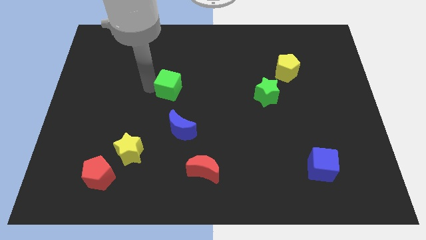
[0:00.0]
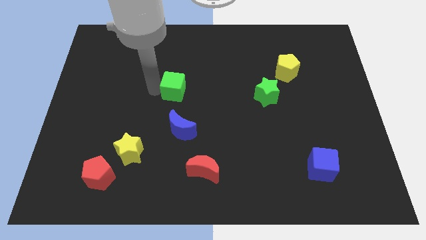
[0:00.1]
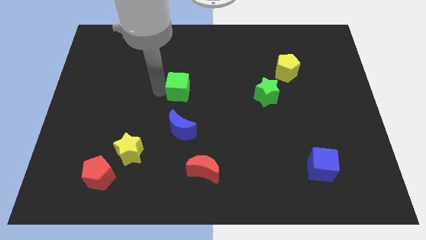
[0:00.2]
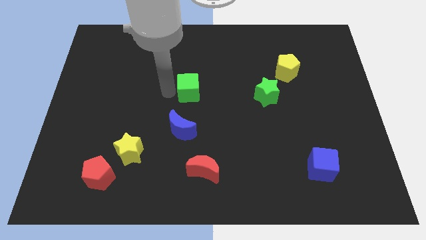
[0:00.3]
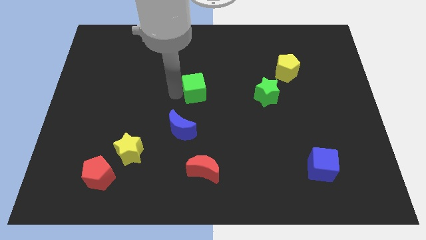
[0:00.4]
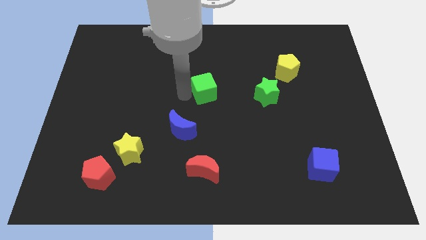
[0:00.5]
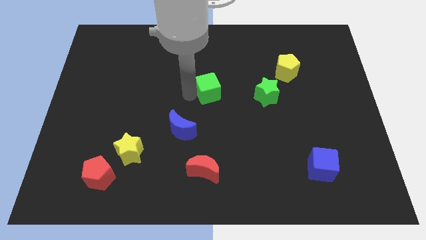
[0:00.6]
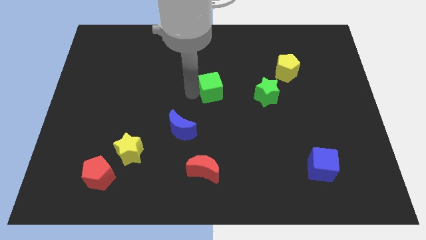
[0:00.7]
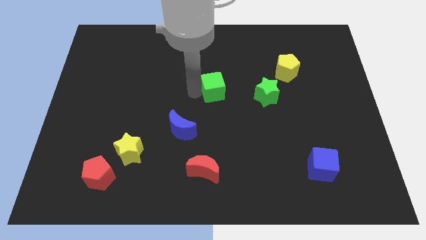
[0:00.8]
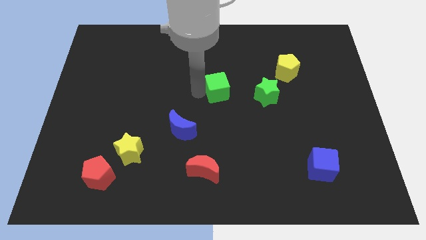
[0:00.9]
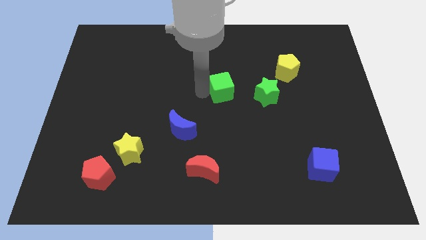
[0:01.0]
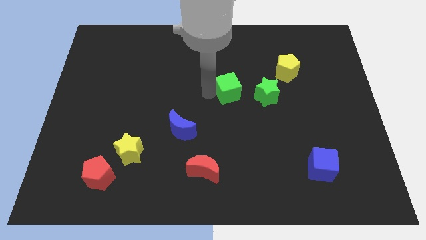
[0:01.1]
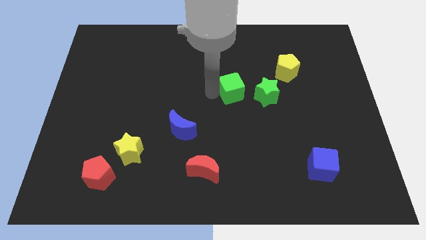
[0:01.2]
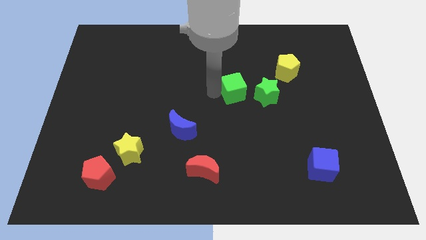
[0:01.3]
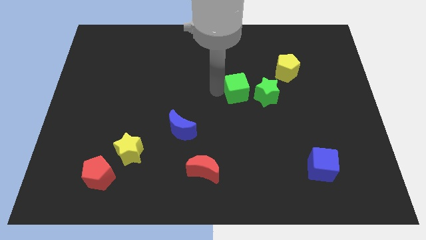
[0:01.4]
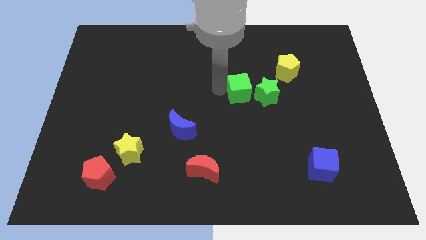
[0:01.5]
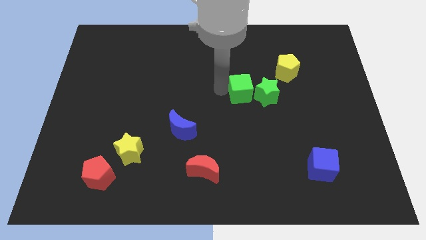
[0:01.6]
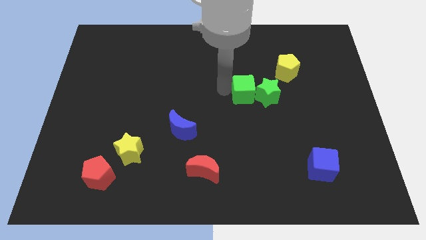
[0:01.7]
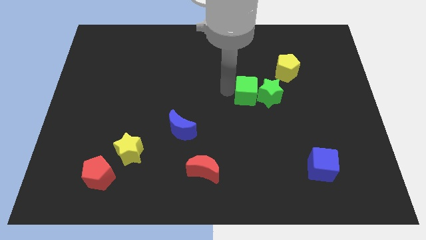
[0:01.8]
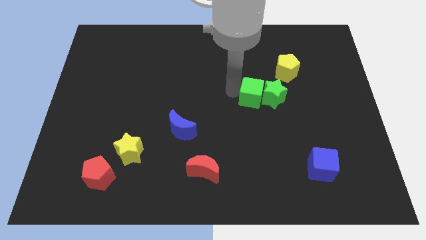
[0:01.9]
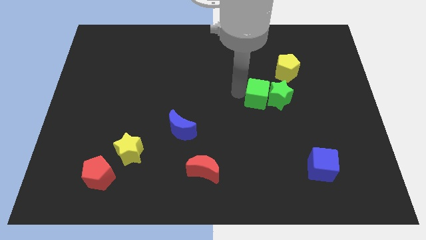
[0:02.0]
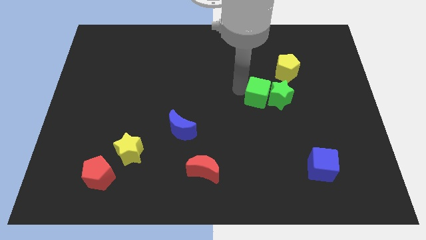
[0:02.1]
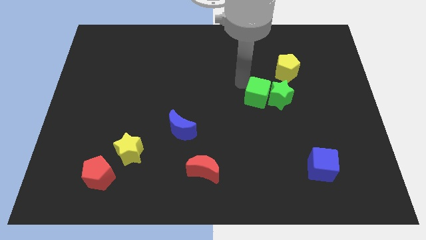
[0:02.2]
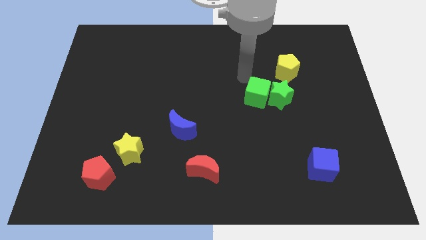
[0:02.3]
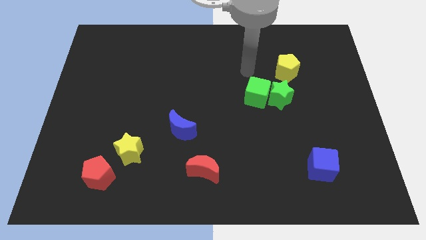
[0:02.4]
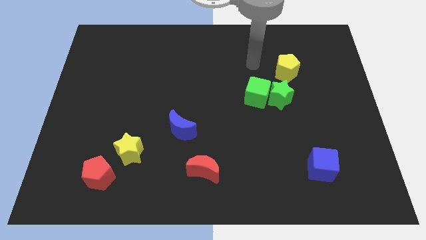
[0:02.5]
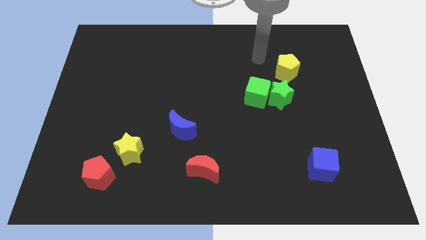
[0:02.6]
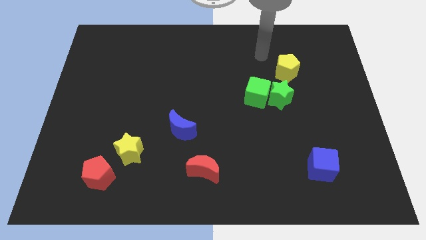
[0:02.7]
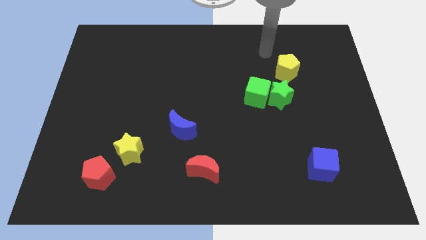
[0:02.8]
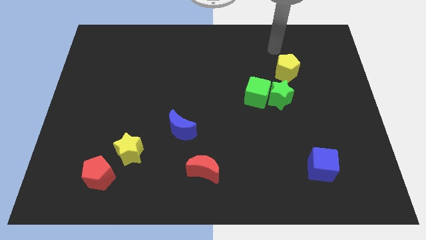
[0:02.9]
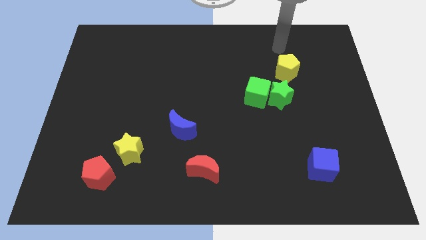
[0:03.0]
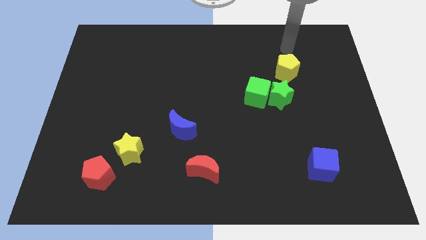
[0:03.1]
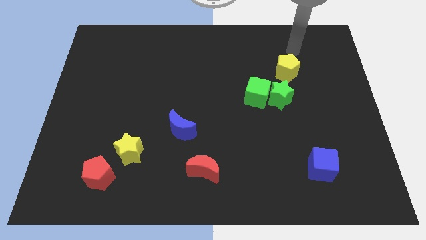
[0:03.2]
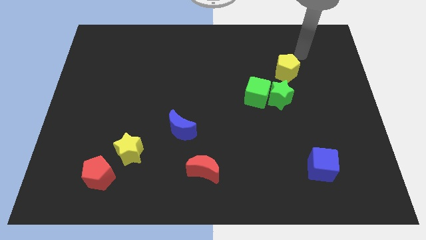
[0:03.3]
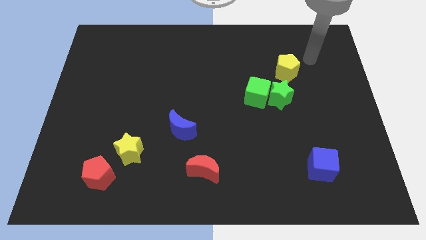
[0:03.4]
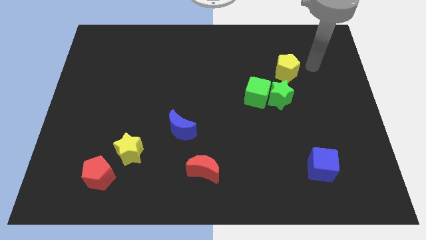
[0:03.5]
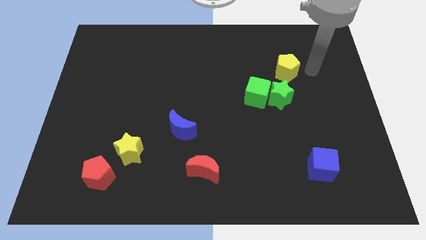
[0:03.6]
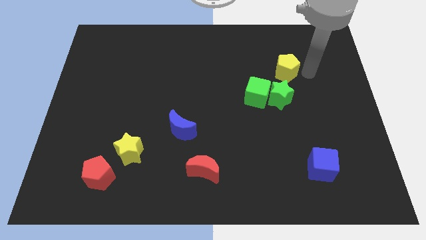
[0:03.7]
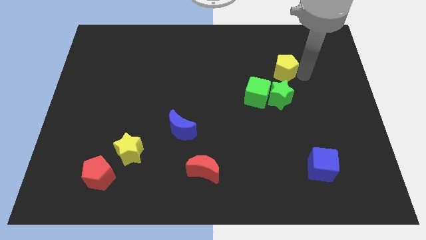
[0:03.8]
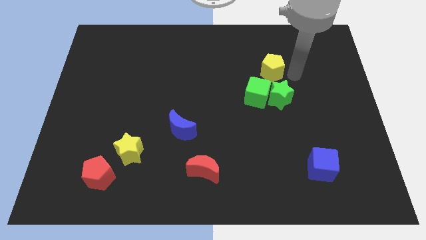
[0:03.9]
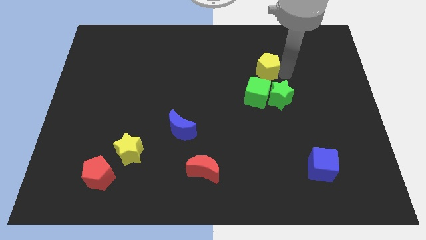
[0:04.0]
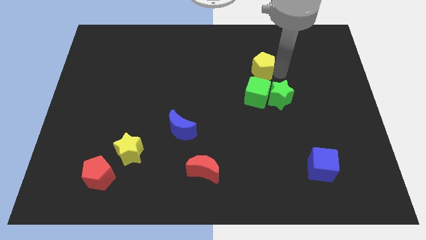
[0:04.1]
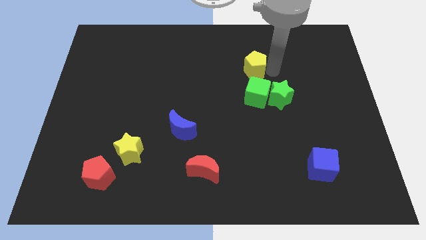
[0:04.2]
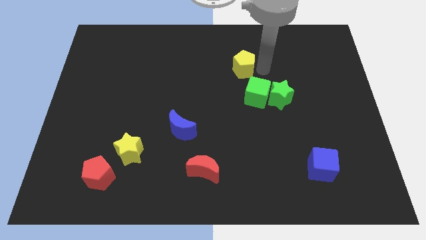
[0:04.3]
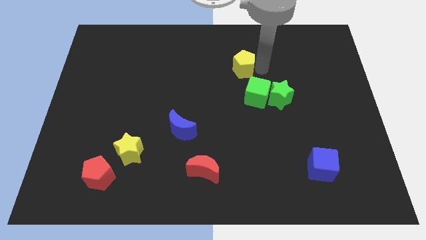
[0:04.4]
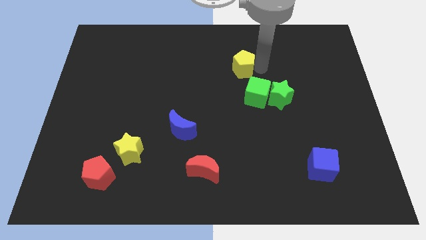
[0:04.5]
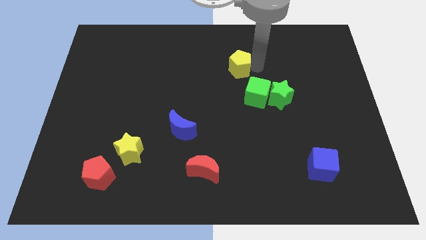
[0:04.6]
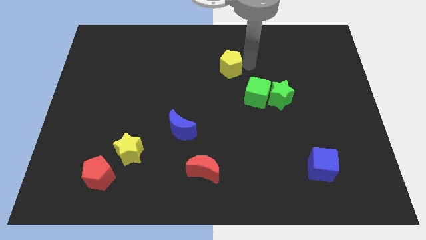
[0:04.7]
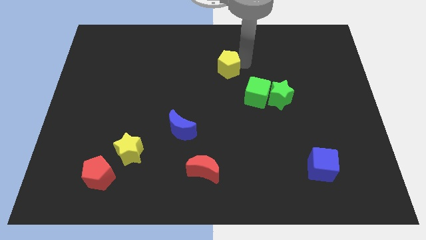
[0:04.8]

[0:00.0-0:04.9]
move the yellow pentagon diagonal to the green cube

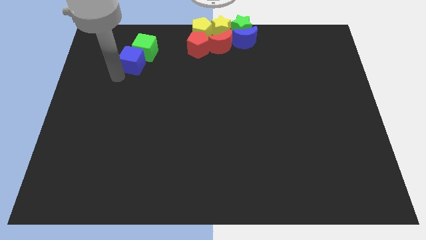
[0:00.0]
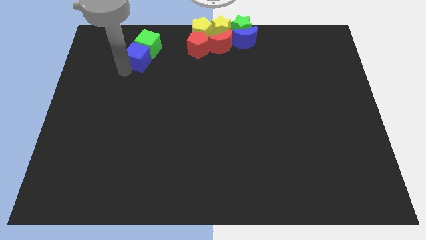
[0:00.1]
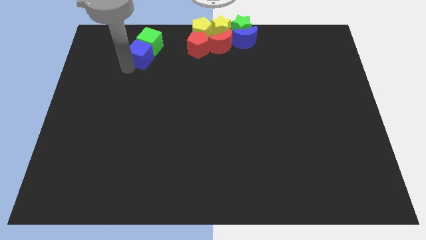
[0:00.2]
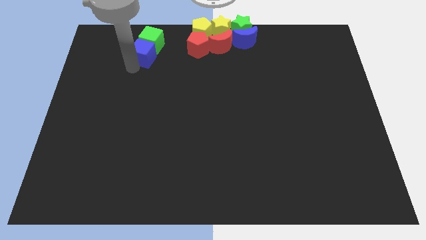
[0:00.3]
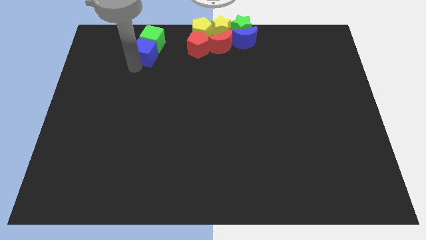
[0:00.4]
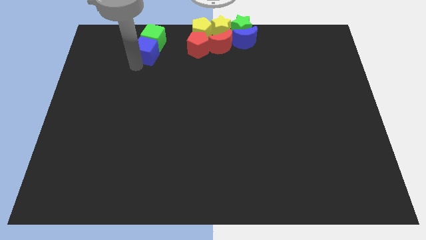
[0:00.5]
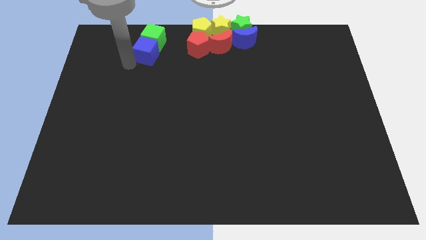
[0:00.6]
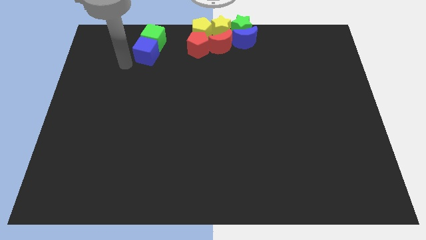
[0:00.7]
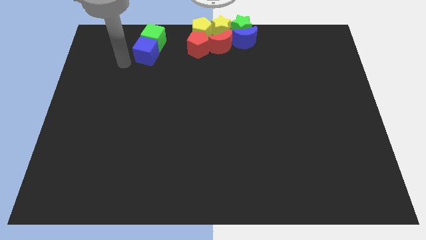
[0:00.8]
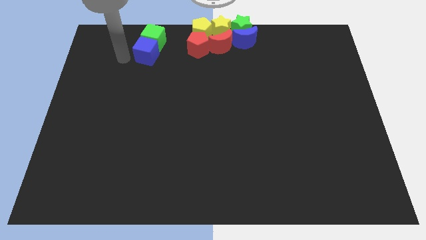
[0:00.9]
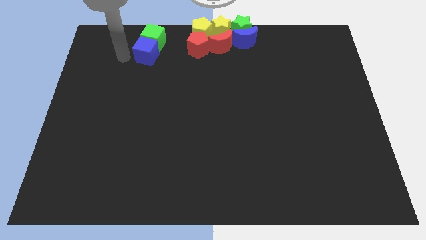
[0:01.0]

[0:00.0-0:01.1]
move the blue cube along with green cube to the left of the group of blocks

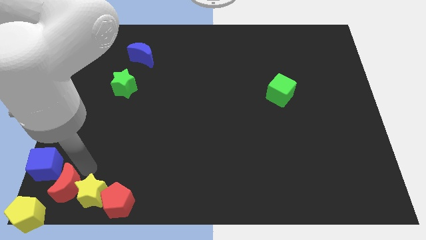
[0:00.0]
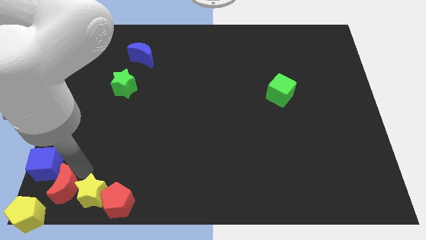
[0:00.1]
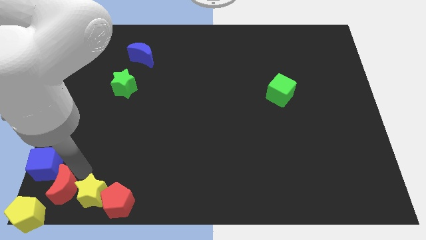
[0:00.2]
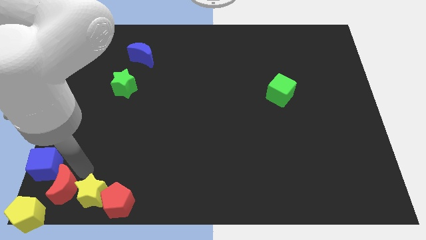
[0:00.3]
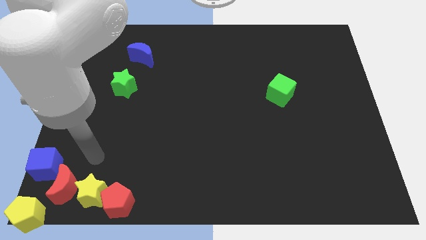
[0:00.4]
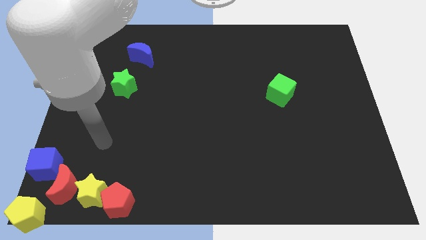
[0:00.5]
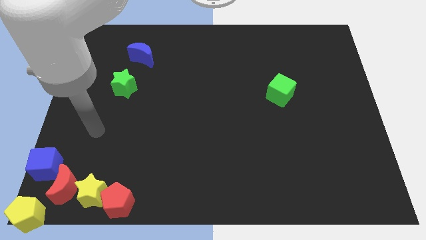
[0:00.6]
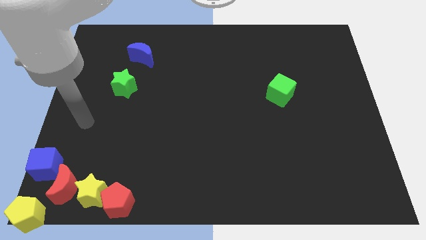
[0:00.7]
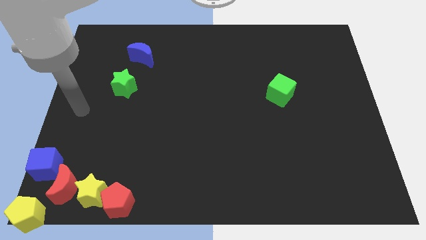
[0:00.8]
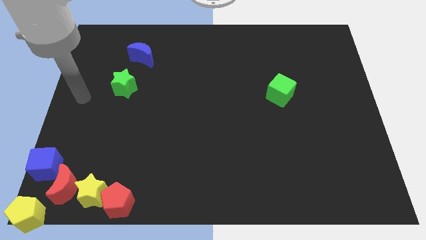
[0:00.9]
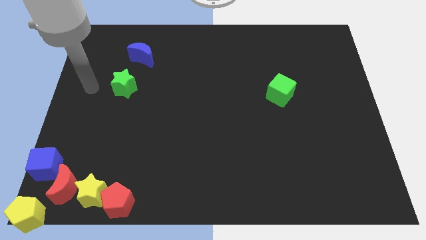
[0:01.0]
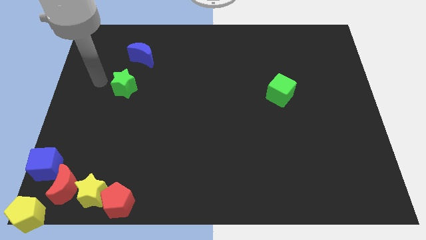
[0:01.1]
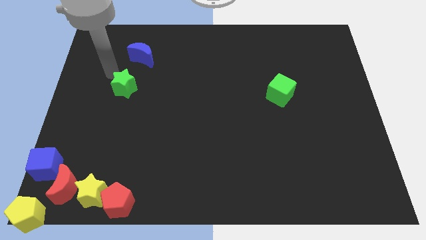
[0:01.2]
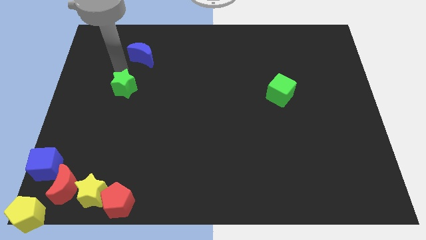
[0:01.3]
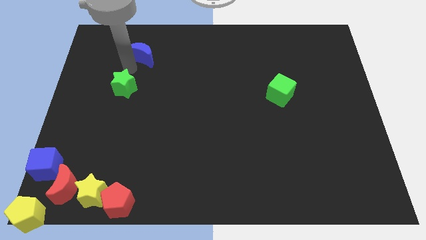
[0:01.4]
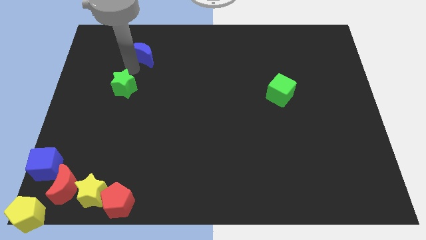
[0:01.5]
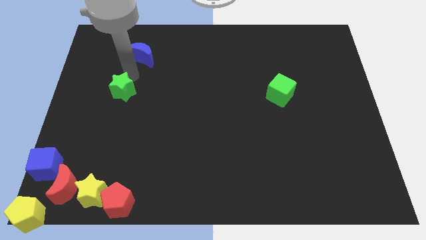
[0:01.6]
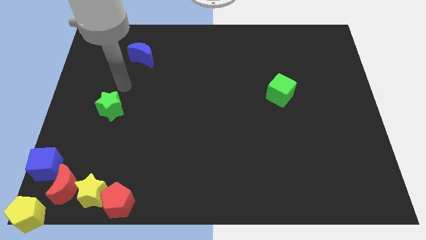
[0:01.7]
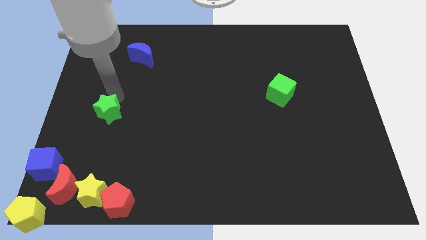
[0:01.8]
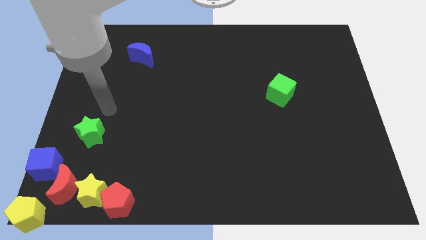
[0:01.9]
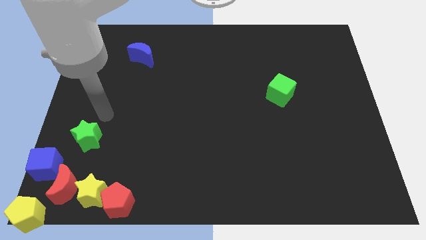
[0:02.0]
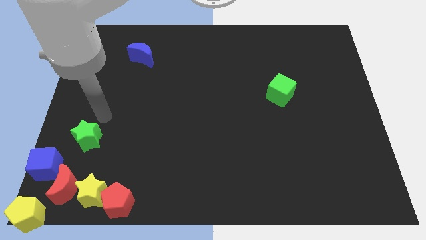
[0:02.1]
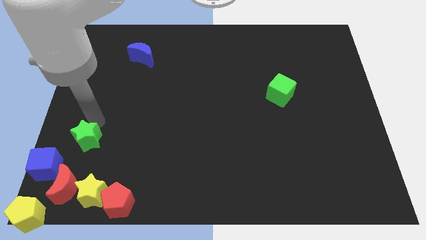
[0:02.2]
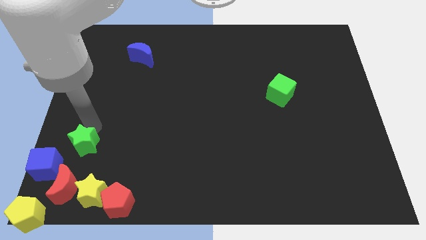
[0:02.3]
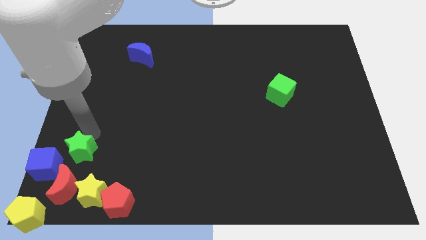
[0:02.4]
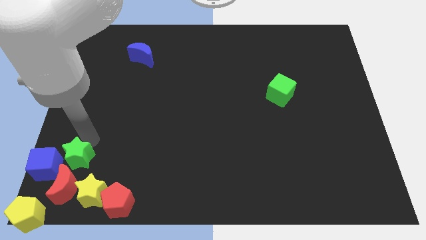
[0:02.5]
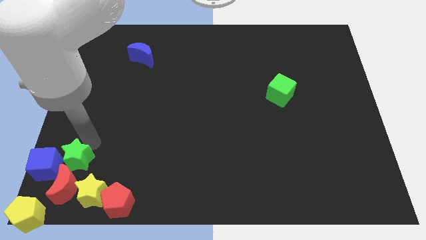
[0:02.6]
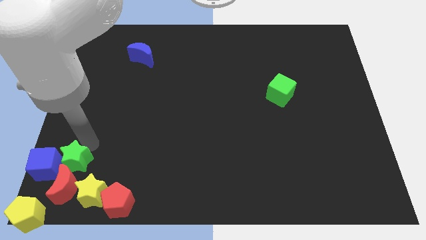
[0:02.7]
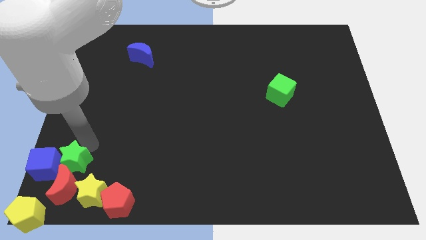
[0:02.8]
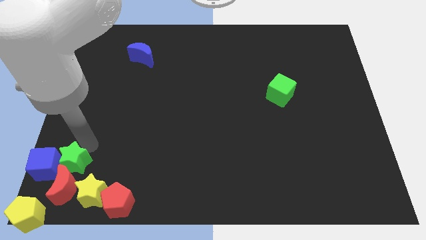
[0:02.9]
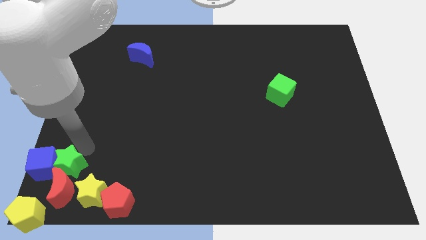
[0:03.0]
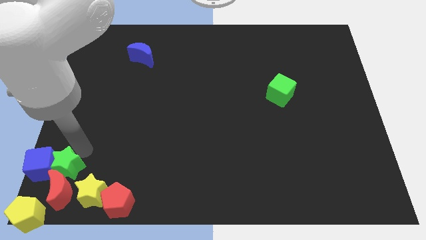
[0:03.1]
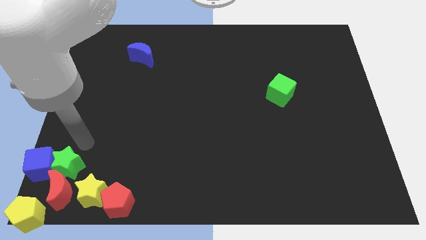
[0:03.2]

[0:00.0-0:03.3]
place green star on the top of the red crescent
